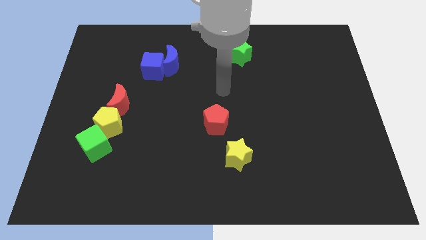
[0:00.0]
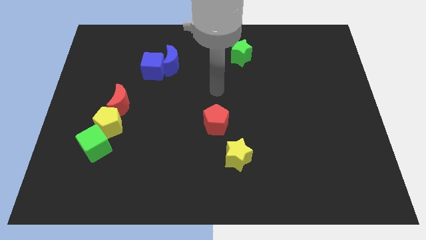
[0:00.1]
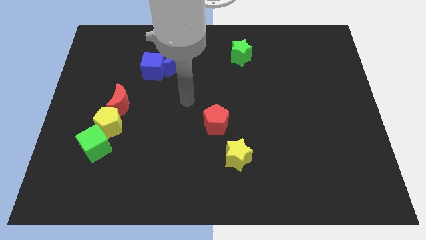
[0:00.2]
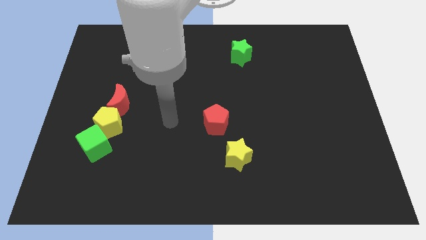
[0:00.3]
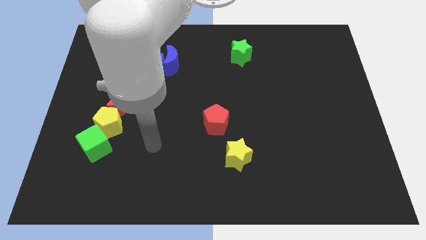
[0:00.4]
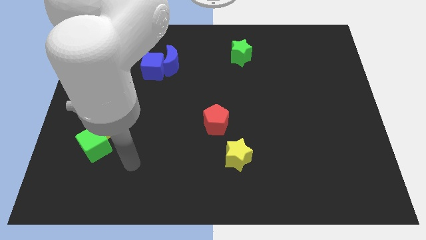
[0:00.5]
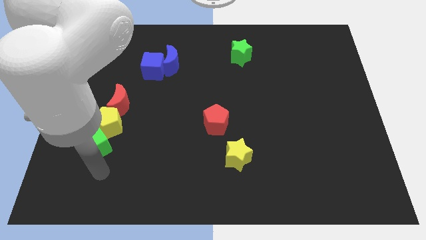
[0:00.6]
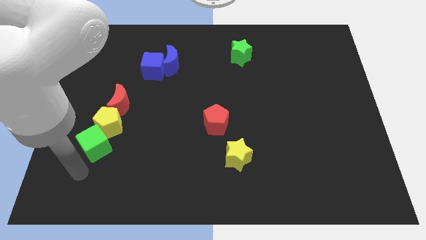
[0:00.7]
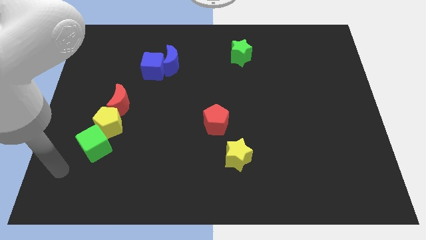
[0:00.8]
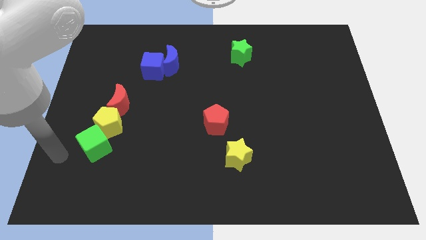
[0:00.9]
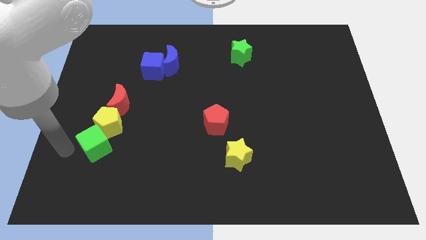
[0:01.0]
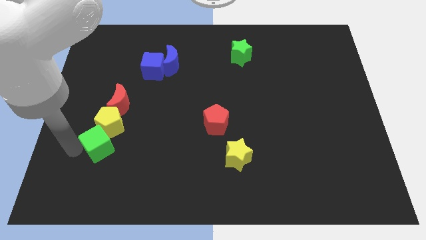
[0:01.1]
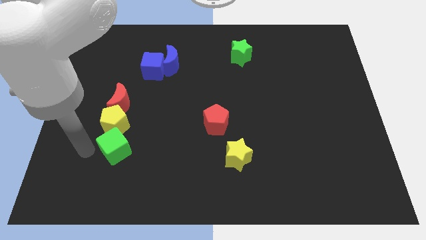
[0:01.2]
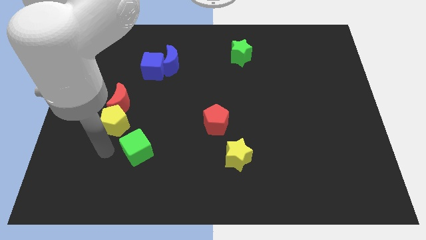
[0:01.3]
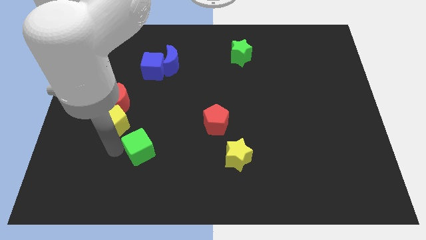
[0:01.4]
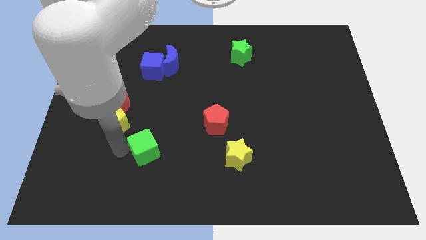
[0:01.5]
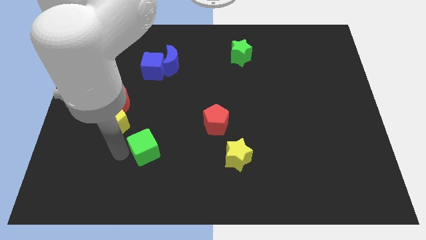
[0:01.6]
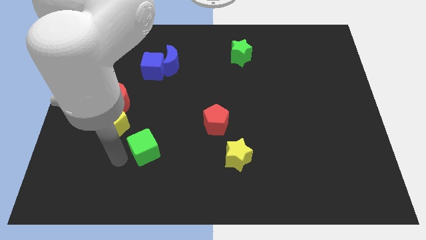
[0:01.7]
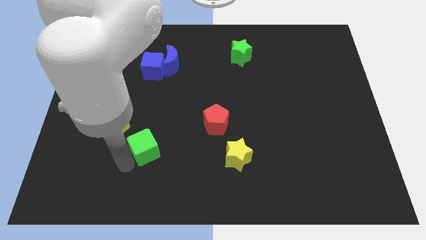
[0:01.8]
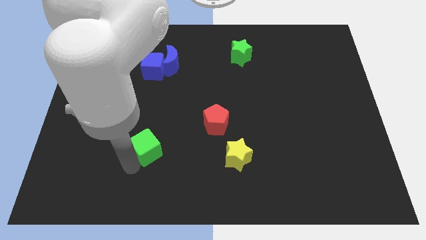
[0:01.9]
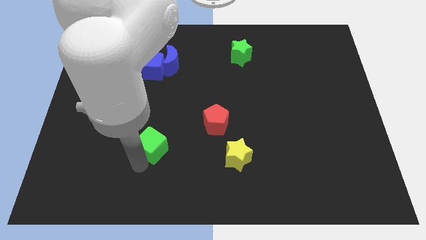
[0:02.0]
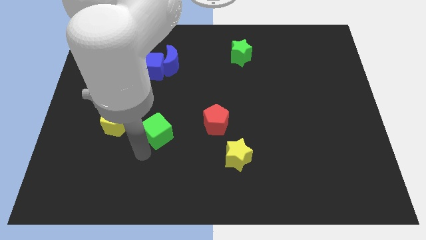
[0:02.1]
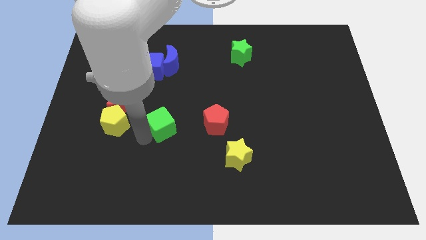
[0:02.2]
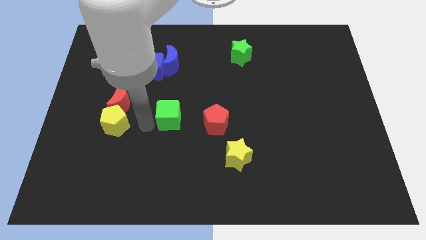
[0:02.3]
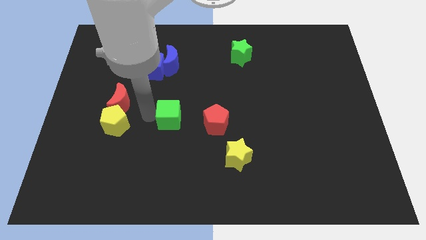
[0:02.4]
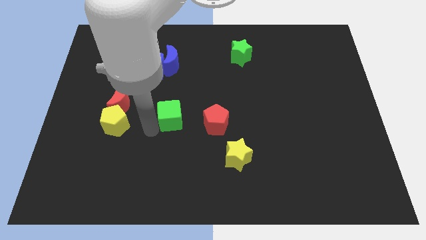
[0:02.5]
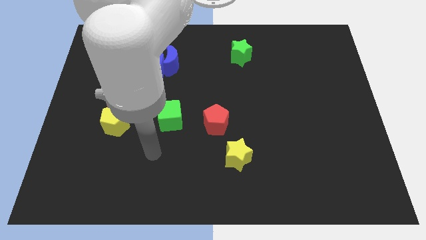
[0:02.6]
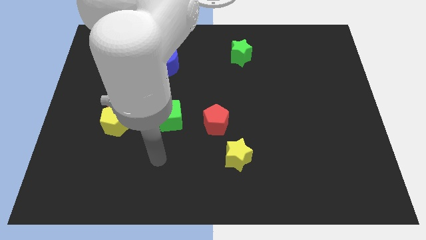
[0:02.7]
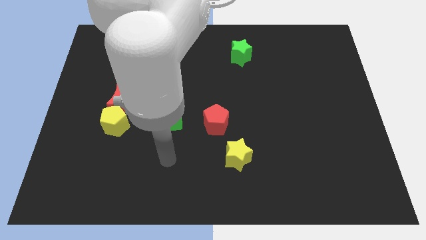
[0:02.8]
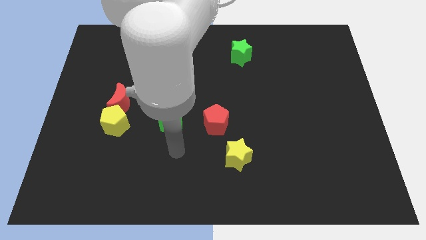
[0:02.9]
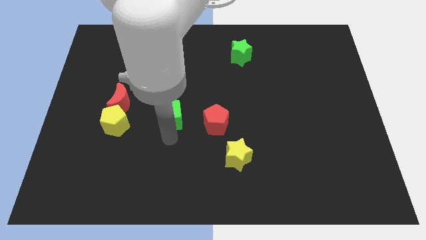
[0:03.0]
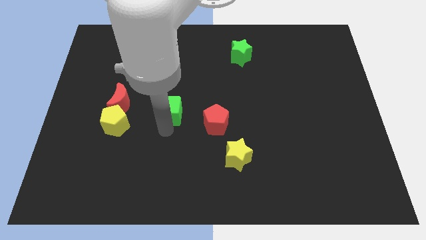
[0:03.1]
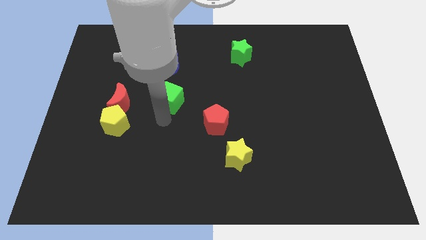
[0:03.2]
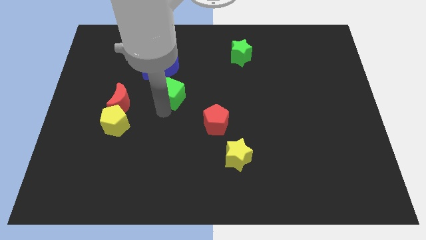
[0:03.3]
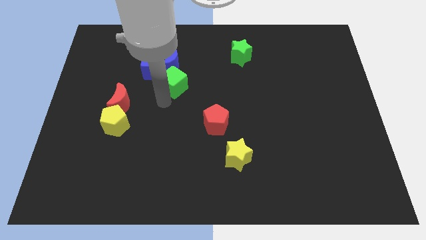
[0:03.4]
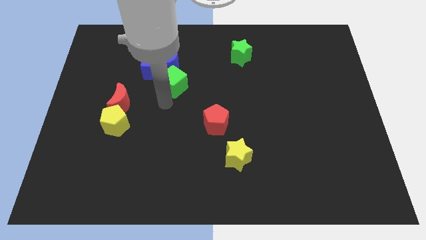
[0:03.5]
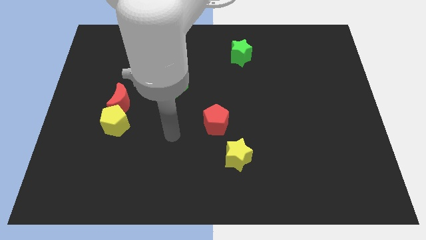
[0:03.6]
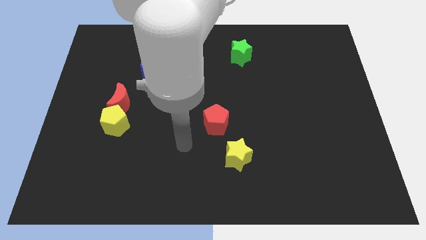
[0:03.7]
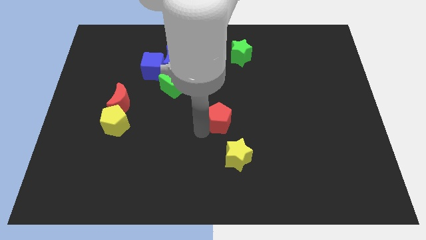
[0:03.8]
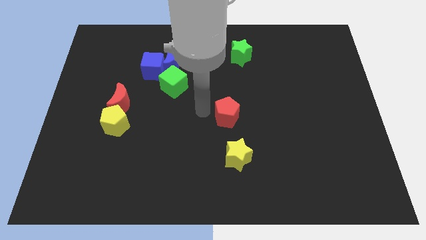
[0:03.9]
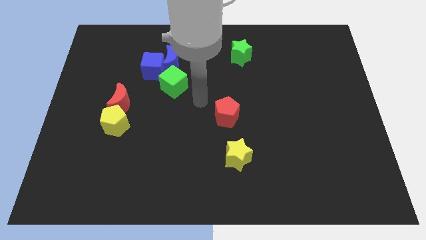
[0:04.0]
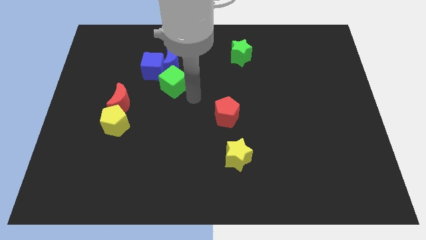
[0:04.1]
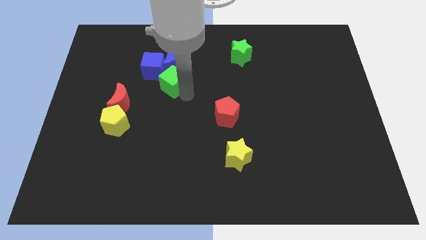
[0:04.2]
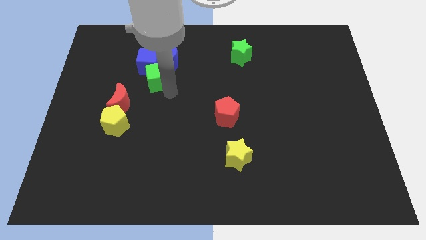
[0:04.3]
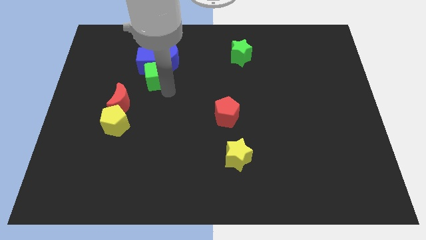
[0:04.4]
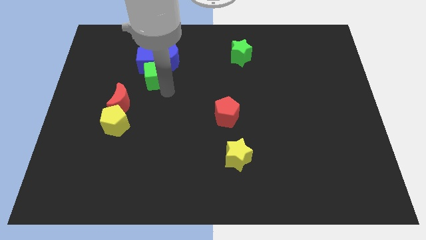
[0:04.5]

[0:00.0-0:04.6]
push the green cube close to the blue cube

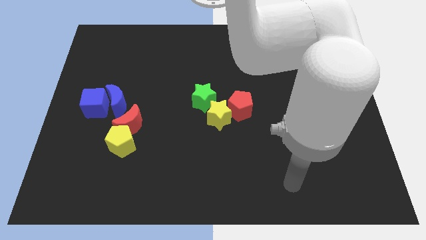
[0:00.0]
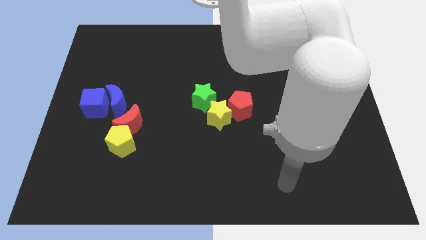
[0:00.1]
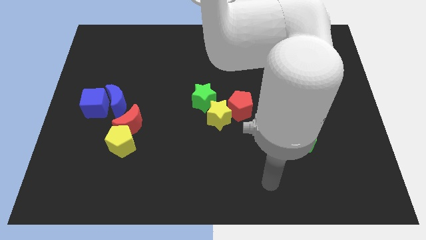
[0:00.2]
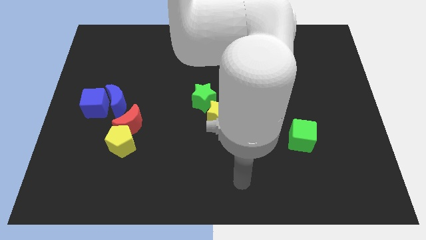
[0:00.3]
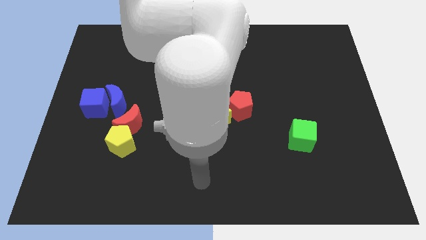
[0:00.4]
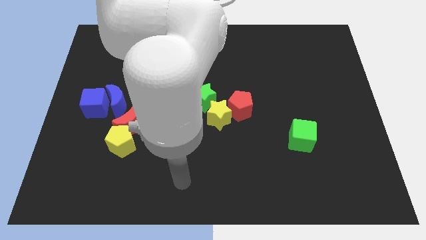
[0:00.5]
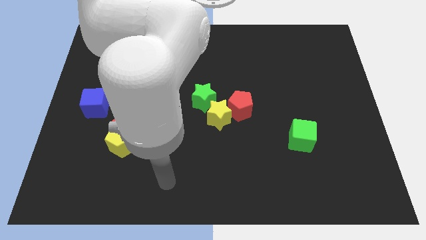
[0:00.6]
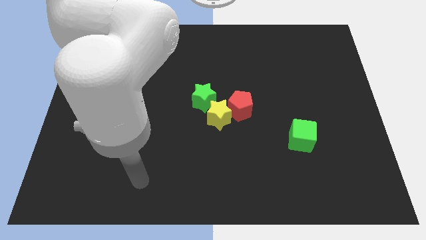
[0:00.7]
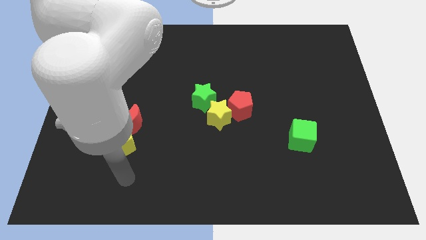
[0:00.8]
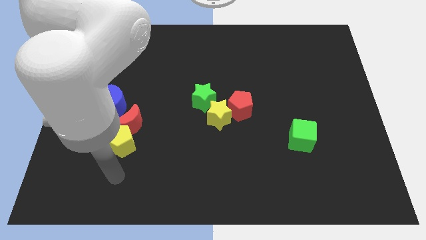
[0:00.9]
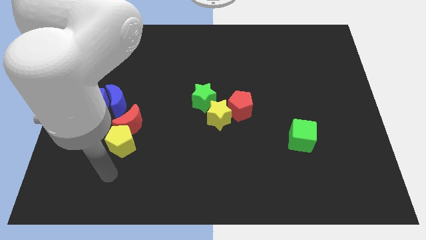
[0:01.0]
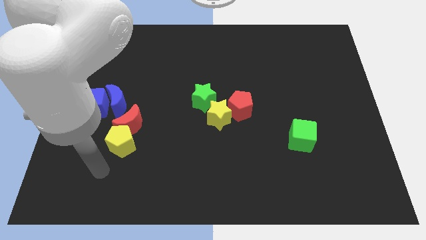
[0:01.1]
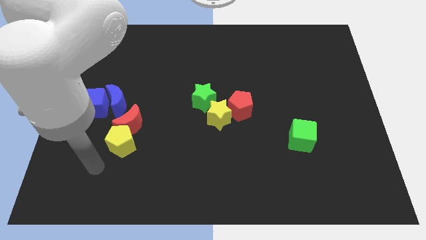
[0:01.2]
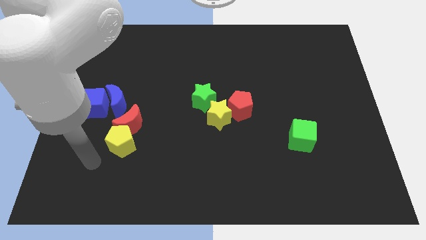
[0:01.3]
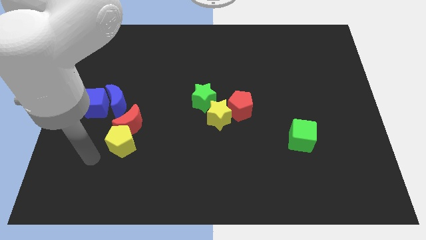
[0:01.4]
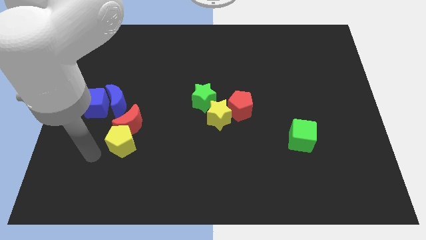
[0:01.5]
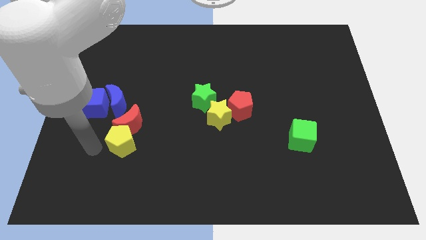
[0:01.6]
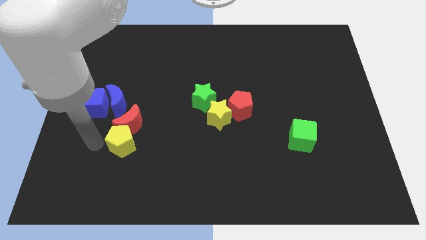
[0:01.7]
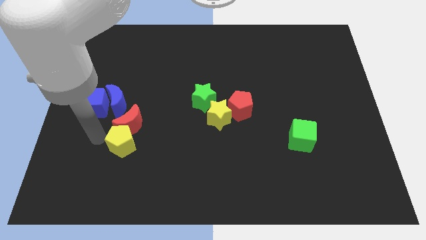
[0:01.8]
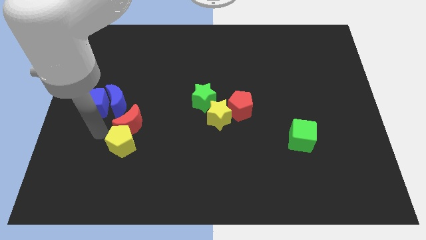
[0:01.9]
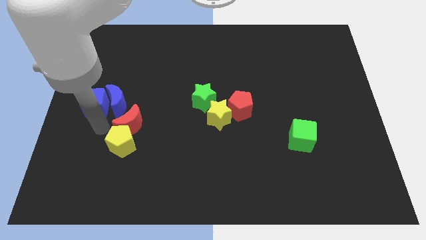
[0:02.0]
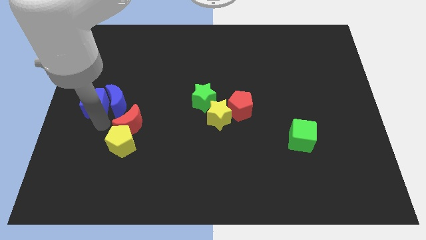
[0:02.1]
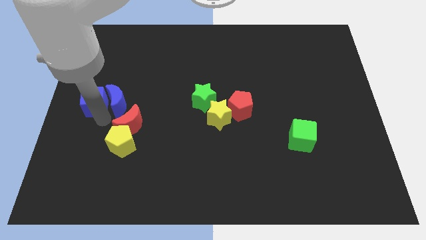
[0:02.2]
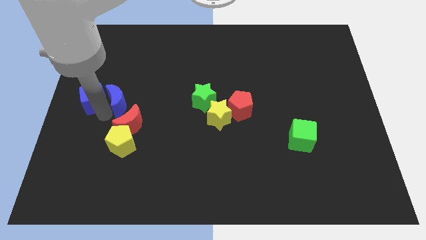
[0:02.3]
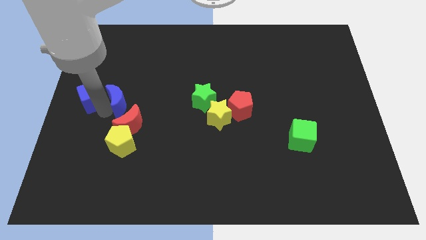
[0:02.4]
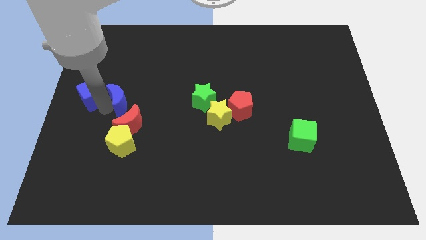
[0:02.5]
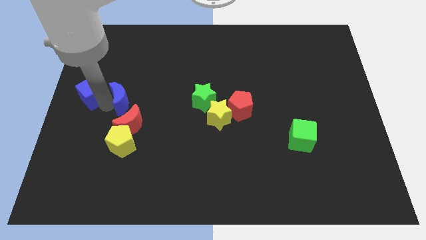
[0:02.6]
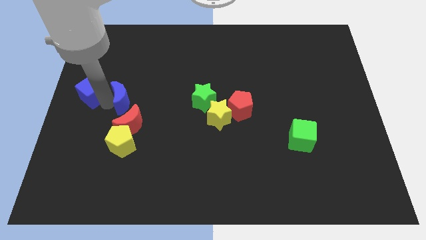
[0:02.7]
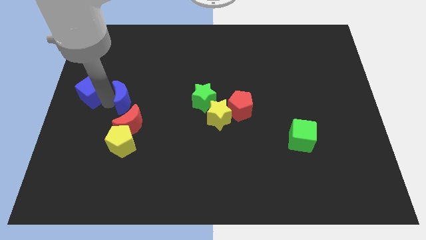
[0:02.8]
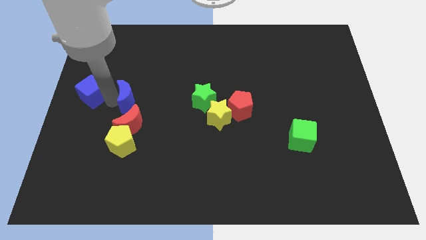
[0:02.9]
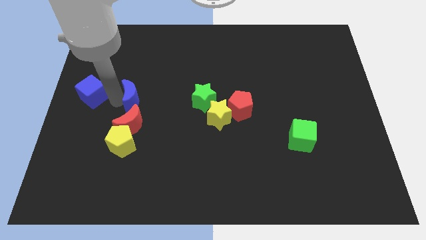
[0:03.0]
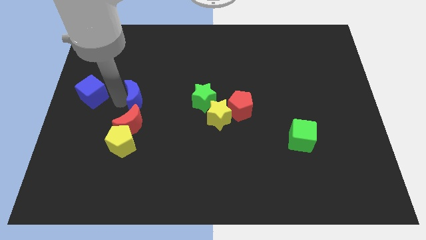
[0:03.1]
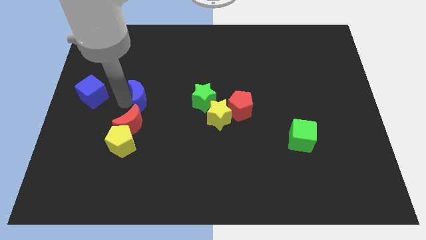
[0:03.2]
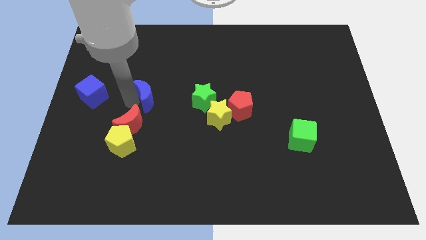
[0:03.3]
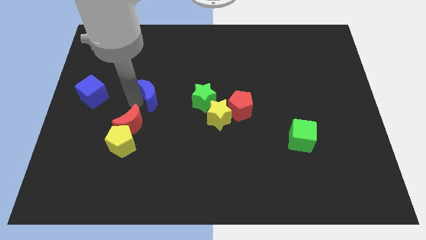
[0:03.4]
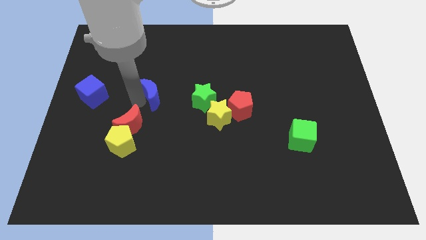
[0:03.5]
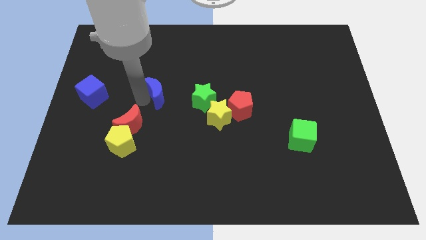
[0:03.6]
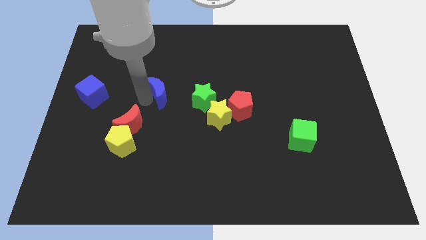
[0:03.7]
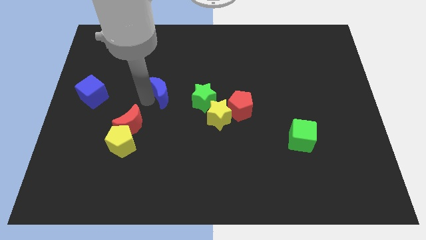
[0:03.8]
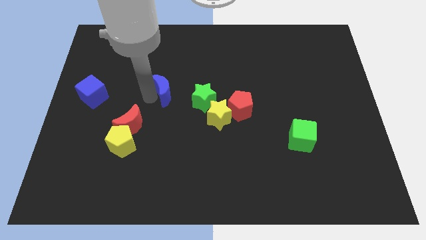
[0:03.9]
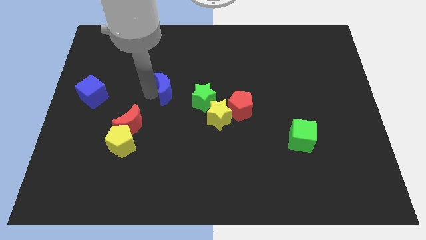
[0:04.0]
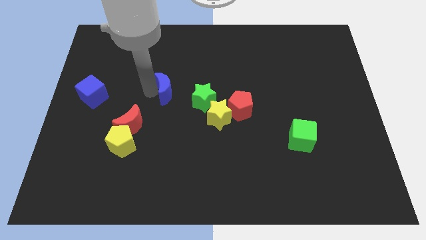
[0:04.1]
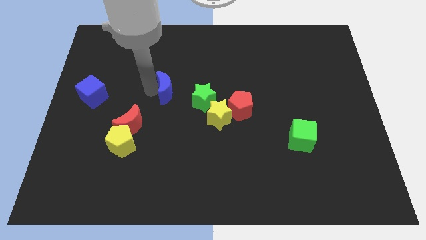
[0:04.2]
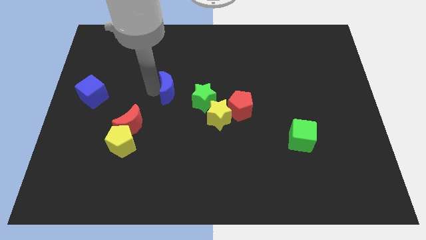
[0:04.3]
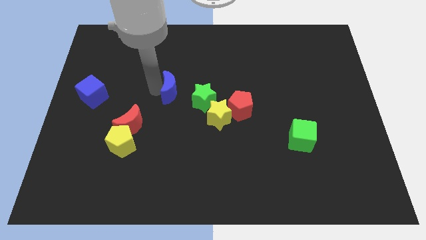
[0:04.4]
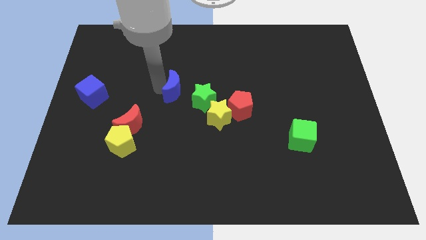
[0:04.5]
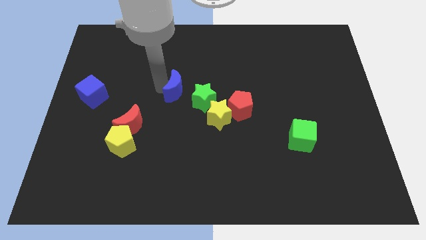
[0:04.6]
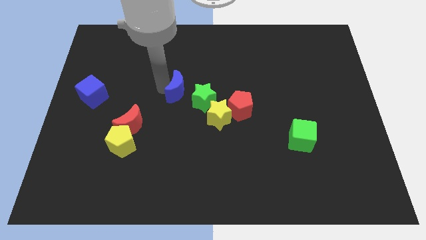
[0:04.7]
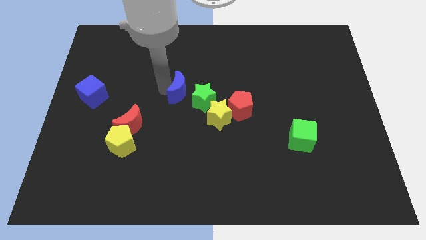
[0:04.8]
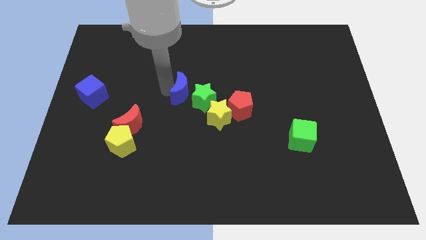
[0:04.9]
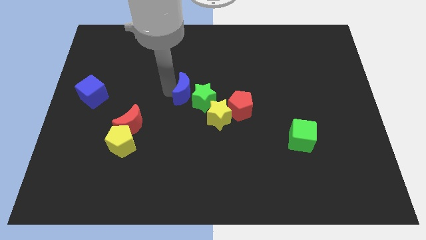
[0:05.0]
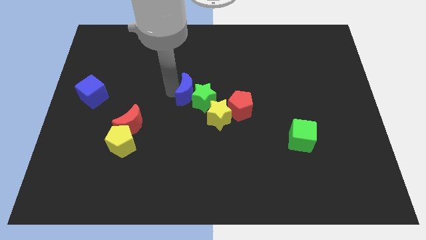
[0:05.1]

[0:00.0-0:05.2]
put the blue moon towards the green star
